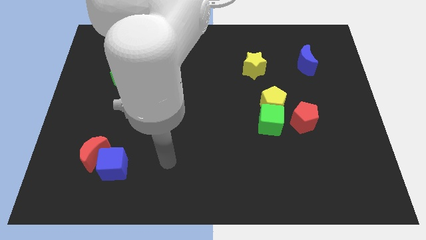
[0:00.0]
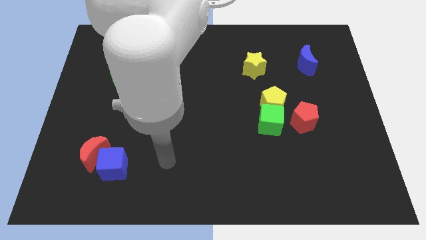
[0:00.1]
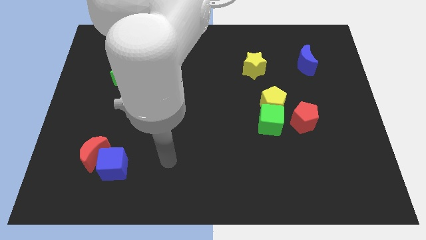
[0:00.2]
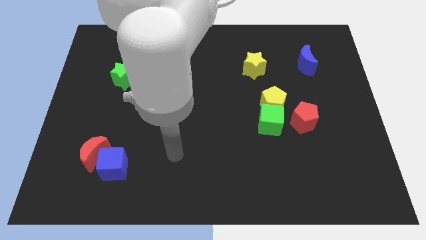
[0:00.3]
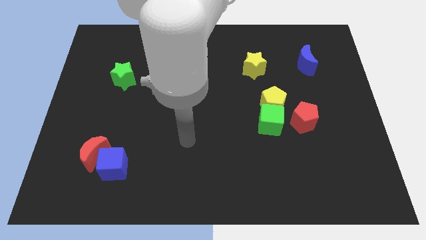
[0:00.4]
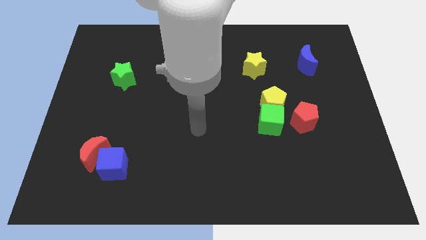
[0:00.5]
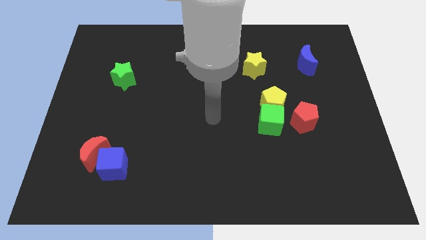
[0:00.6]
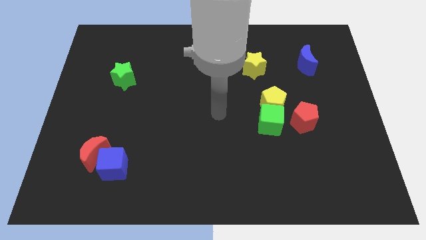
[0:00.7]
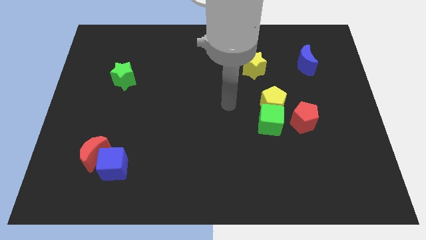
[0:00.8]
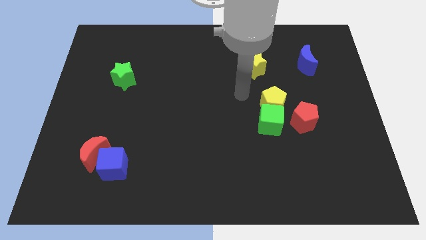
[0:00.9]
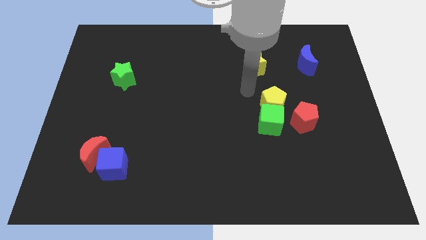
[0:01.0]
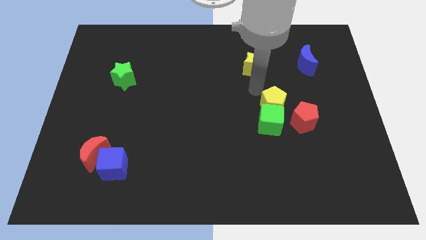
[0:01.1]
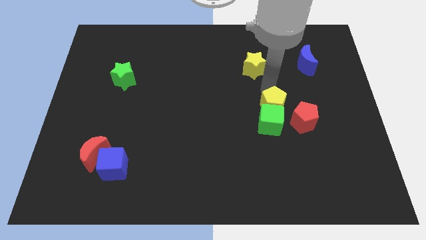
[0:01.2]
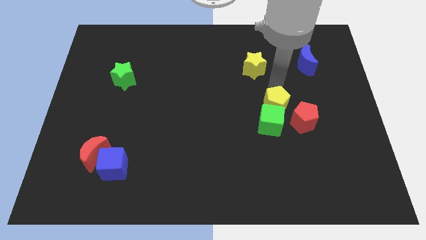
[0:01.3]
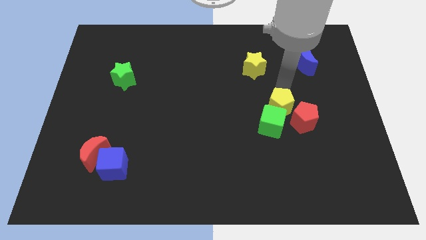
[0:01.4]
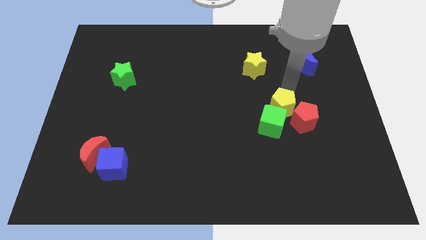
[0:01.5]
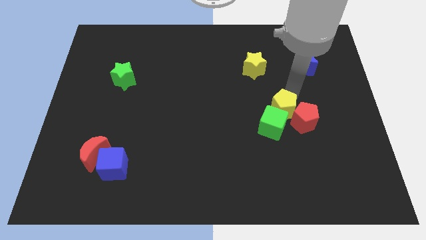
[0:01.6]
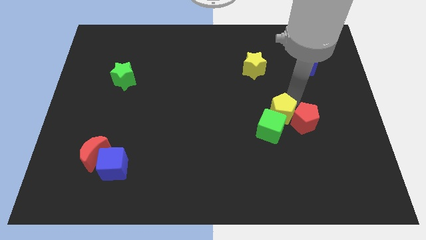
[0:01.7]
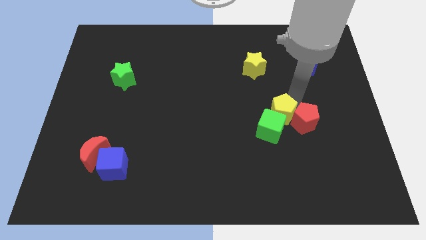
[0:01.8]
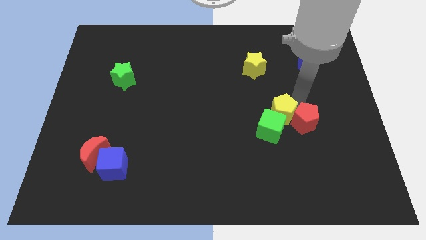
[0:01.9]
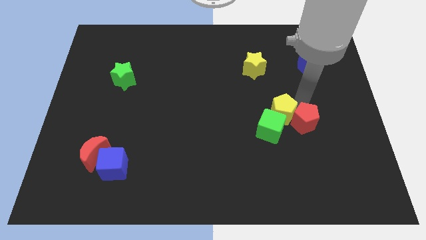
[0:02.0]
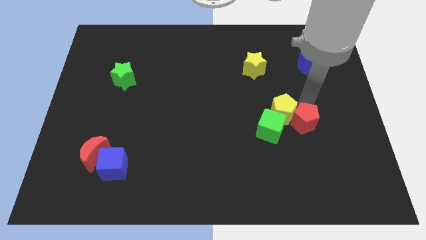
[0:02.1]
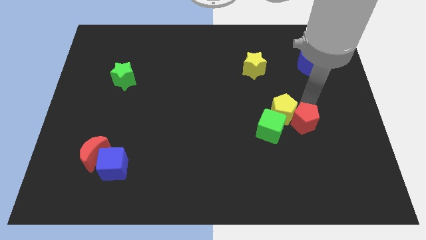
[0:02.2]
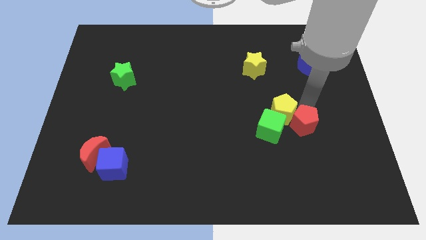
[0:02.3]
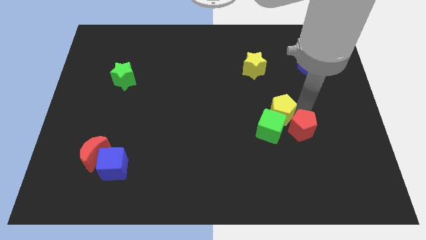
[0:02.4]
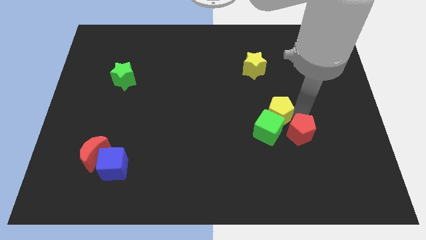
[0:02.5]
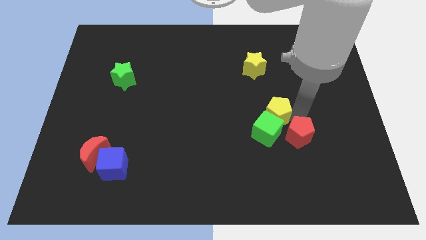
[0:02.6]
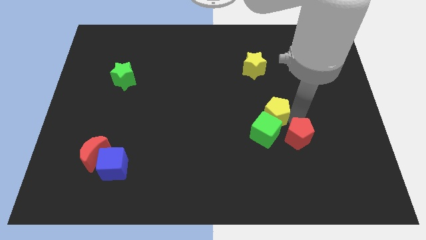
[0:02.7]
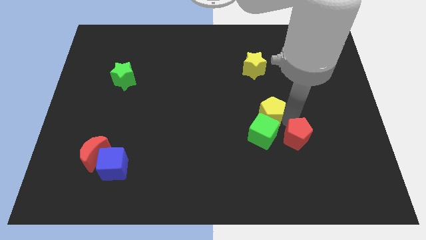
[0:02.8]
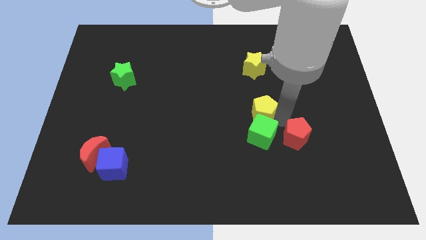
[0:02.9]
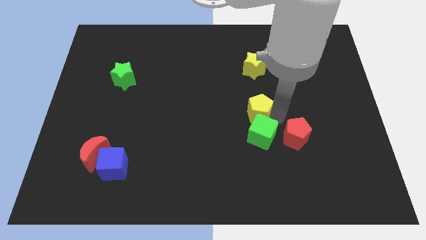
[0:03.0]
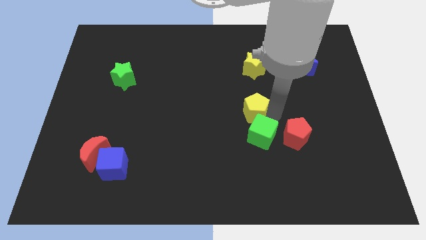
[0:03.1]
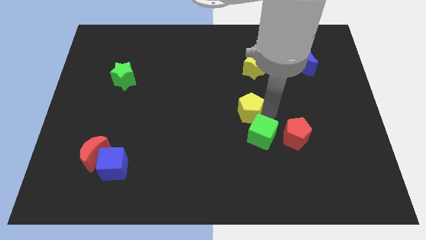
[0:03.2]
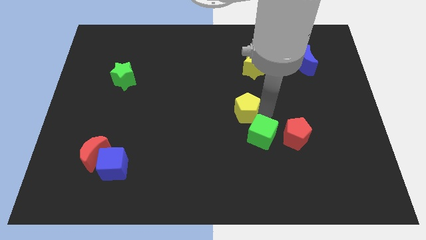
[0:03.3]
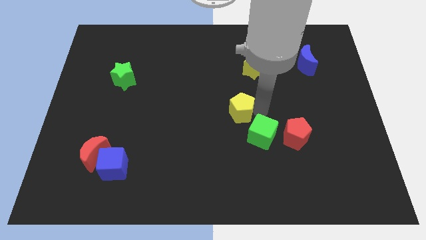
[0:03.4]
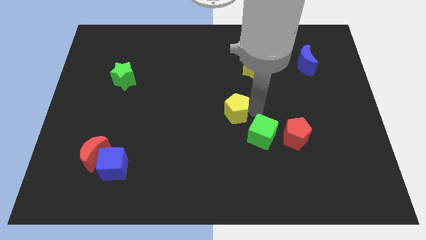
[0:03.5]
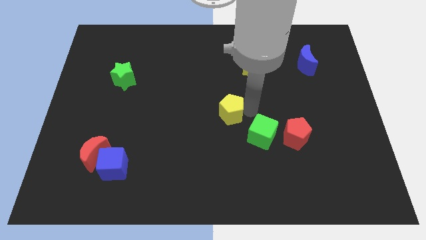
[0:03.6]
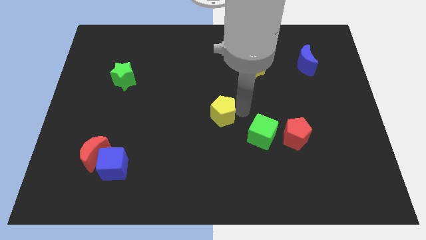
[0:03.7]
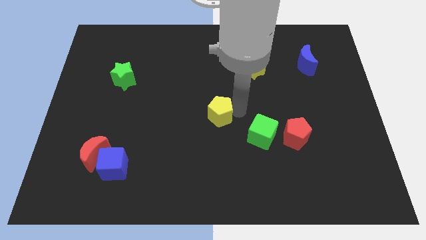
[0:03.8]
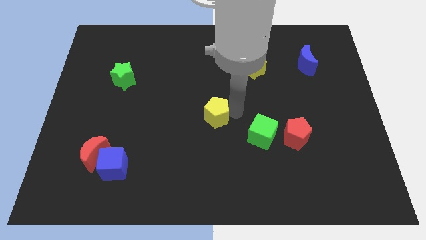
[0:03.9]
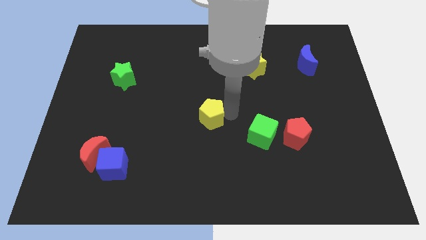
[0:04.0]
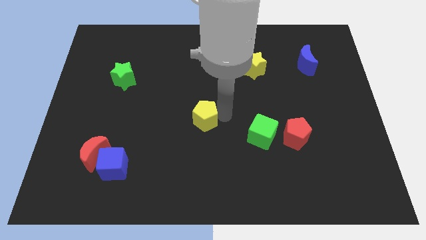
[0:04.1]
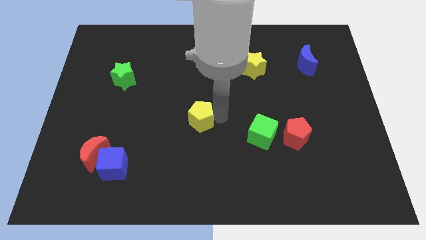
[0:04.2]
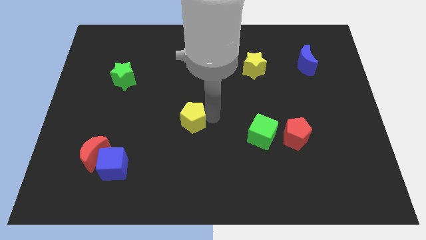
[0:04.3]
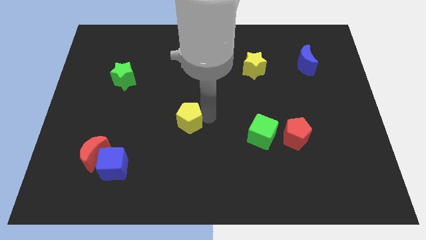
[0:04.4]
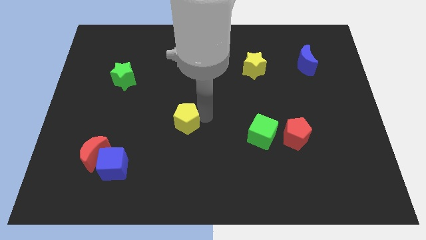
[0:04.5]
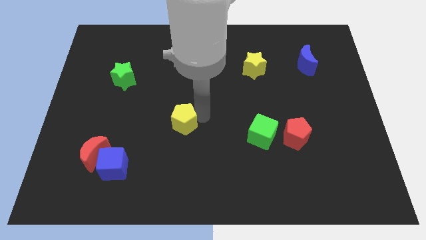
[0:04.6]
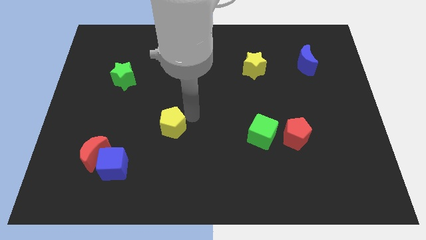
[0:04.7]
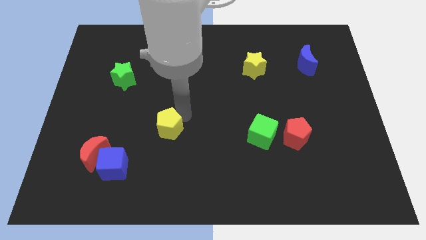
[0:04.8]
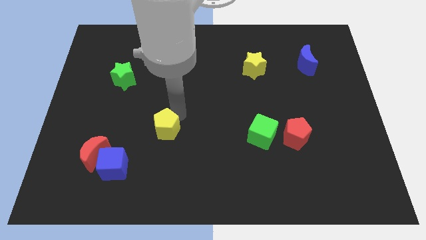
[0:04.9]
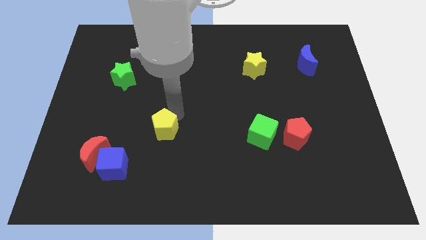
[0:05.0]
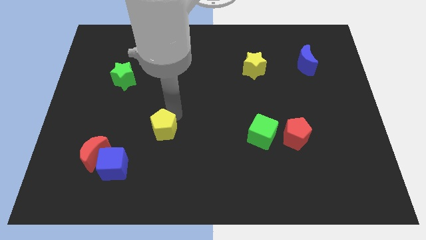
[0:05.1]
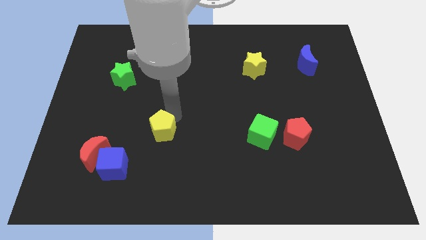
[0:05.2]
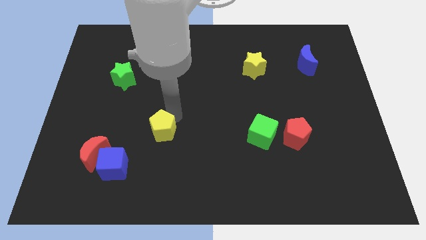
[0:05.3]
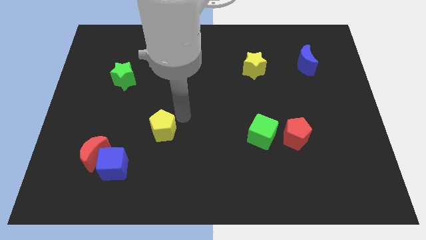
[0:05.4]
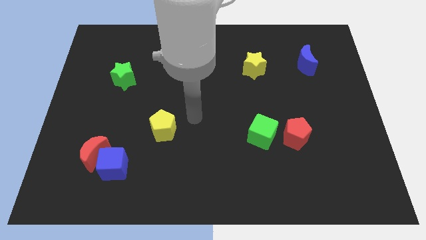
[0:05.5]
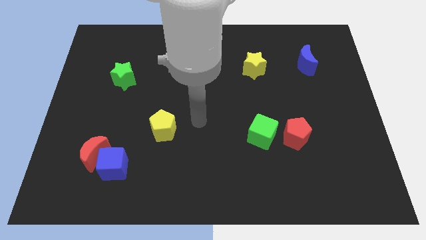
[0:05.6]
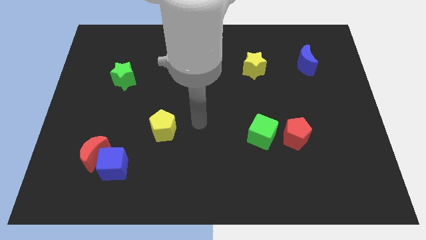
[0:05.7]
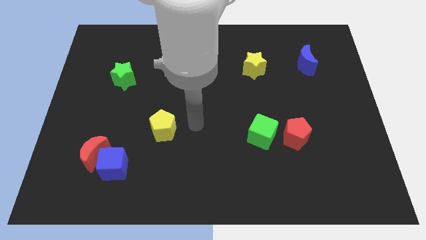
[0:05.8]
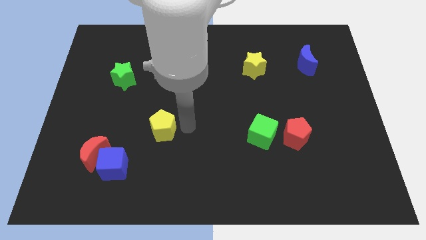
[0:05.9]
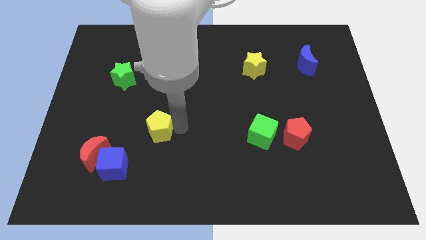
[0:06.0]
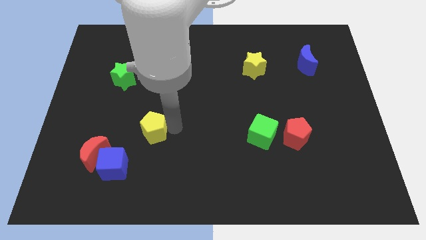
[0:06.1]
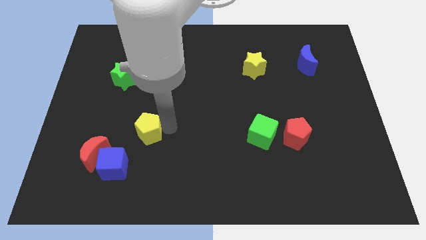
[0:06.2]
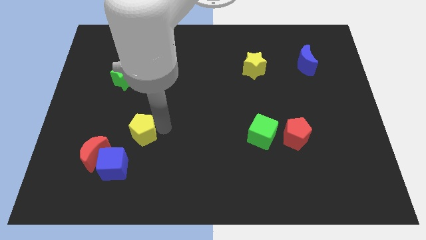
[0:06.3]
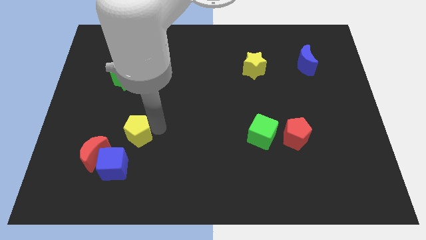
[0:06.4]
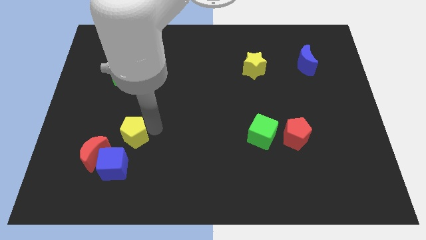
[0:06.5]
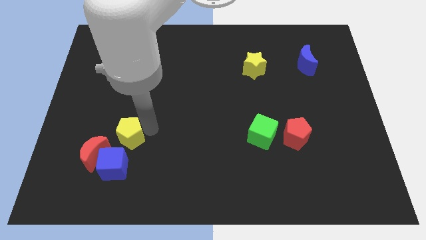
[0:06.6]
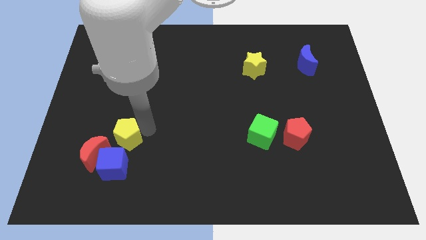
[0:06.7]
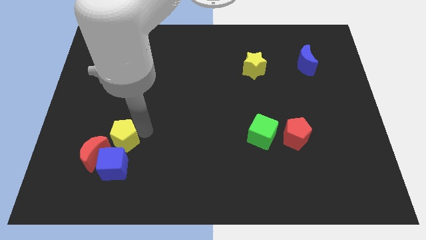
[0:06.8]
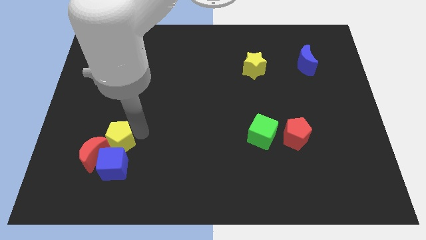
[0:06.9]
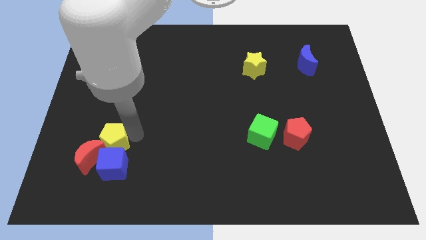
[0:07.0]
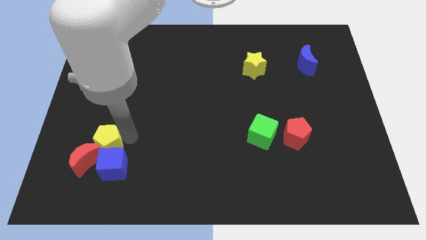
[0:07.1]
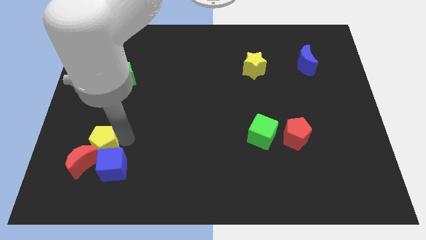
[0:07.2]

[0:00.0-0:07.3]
move the yellow pentagon to the red moon

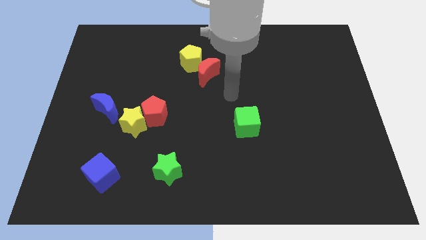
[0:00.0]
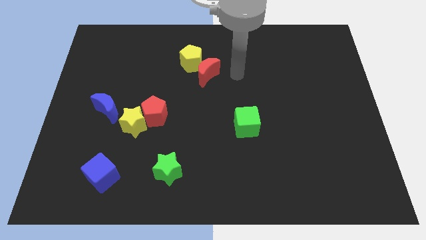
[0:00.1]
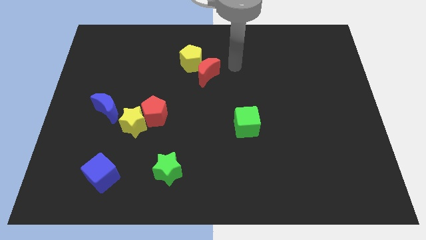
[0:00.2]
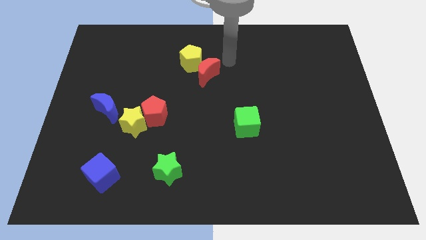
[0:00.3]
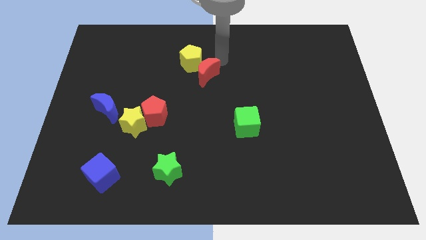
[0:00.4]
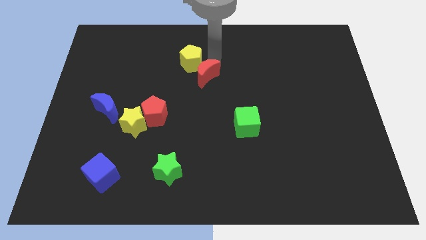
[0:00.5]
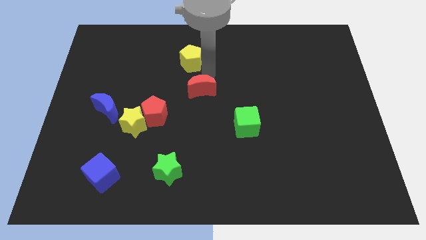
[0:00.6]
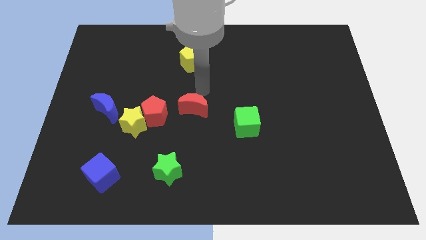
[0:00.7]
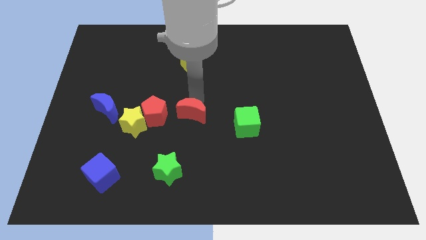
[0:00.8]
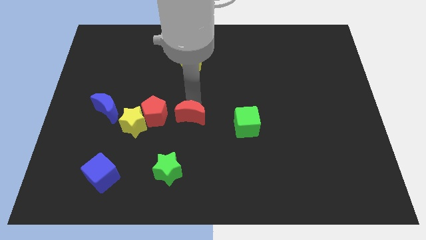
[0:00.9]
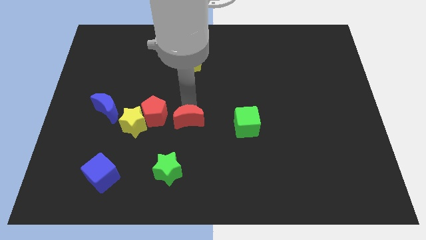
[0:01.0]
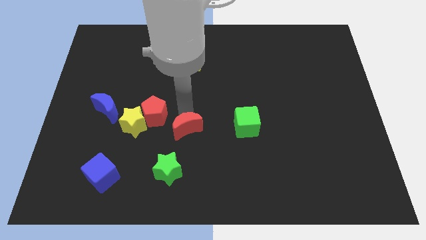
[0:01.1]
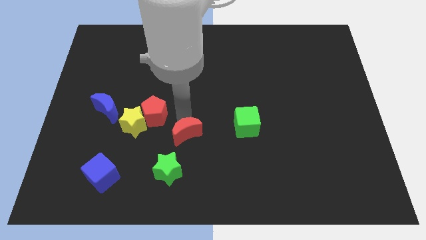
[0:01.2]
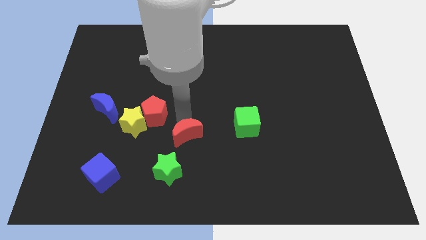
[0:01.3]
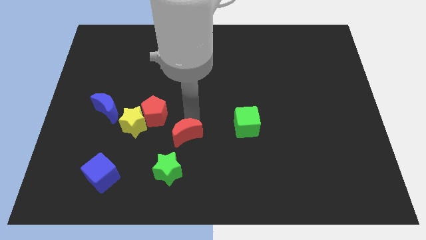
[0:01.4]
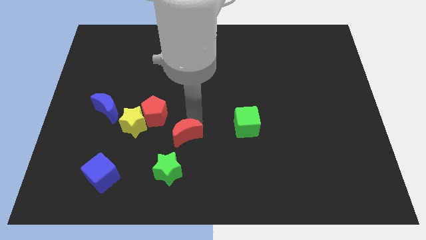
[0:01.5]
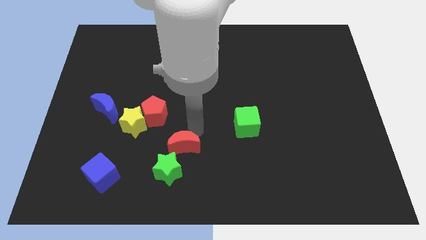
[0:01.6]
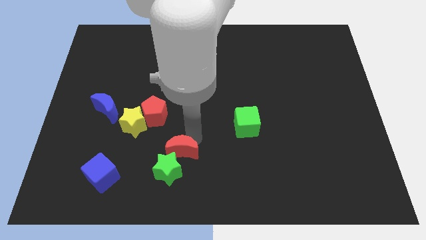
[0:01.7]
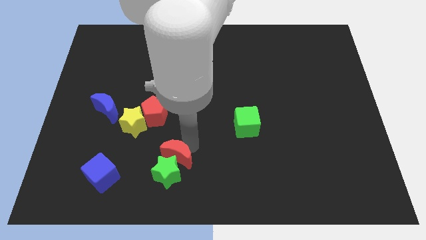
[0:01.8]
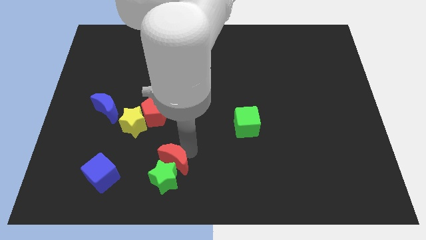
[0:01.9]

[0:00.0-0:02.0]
move the red moon next to the green star
